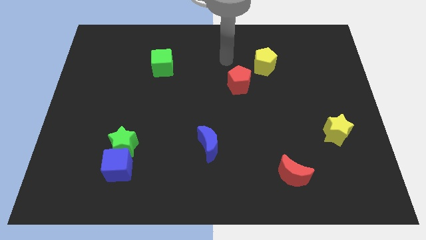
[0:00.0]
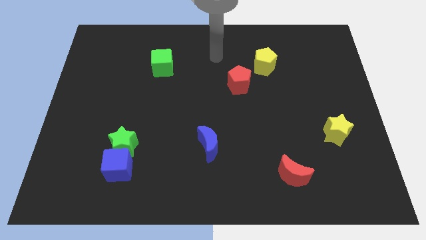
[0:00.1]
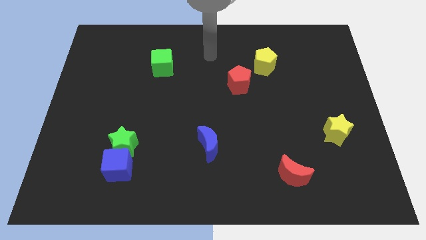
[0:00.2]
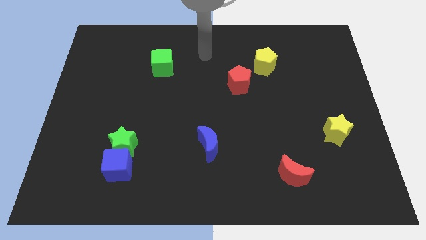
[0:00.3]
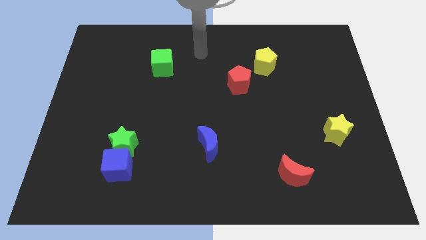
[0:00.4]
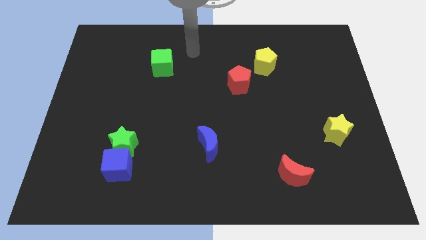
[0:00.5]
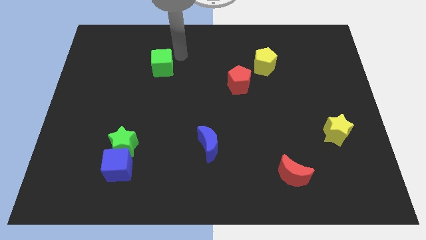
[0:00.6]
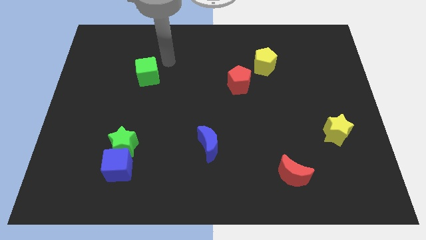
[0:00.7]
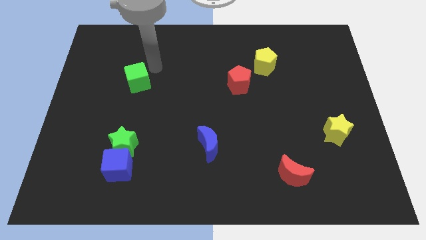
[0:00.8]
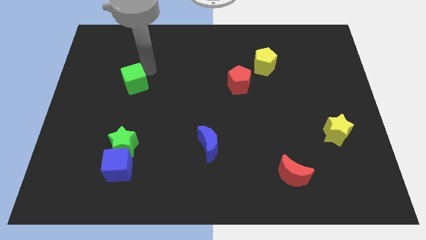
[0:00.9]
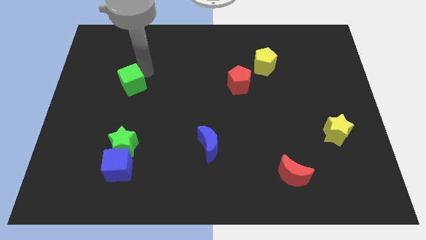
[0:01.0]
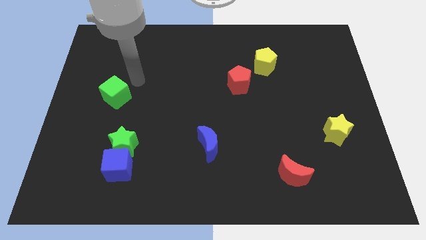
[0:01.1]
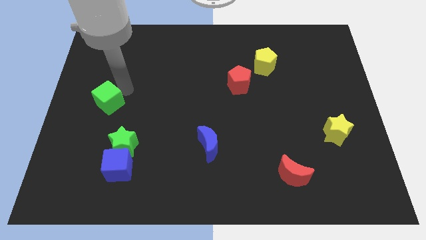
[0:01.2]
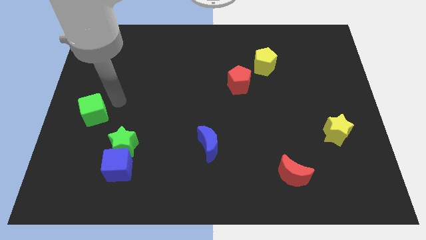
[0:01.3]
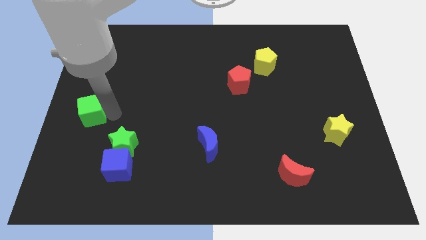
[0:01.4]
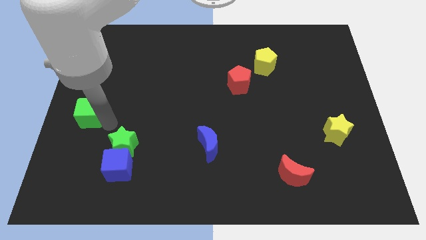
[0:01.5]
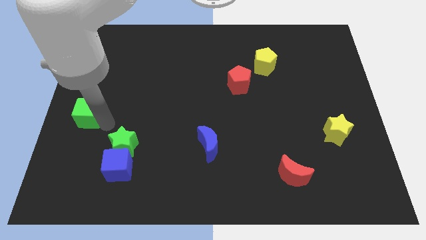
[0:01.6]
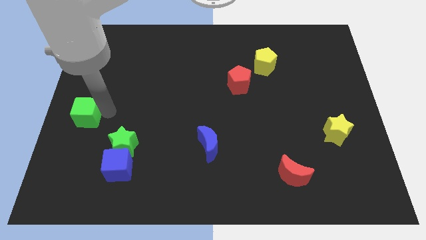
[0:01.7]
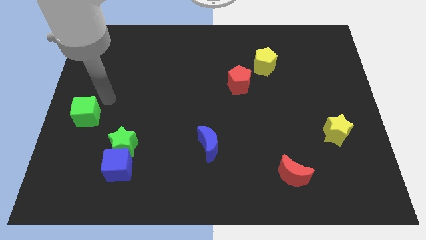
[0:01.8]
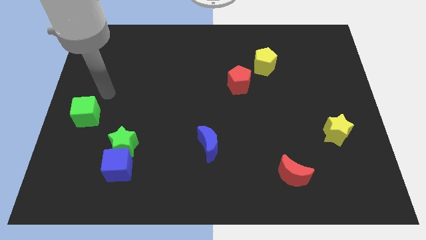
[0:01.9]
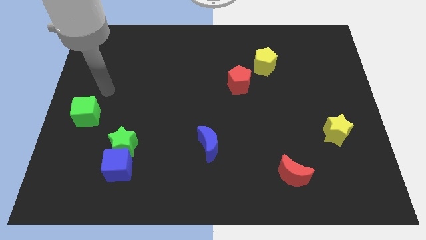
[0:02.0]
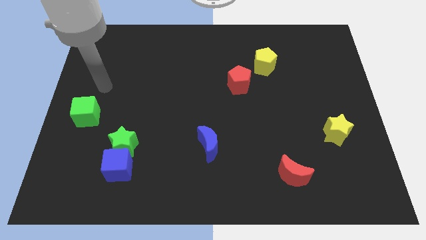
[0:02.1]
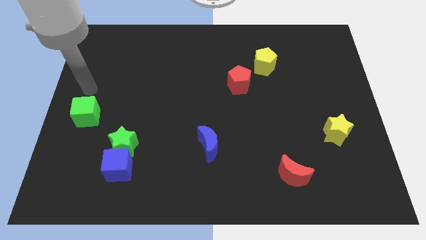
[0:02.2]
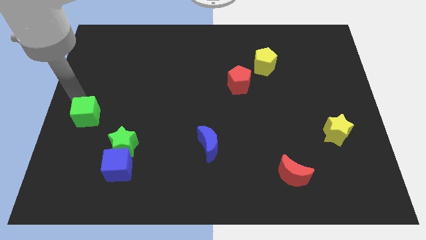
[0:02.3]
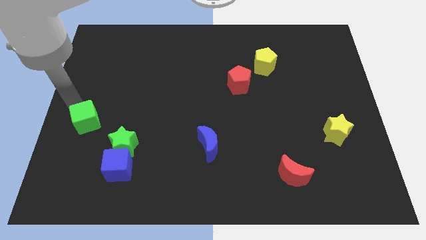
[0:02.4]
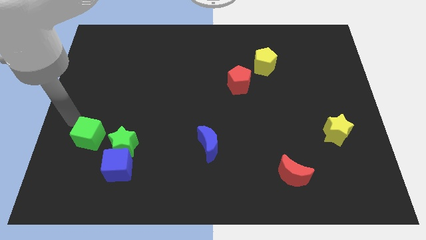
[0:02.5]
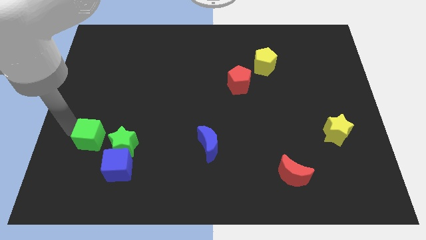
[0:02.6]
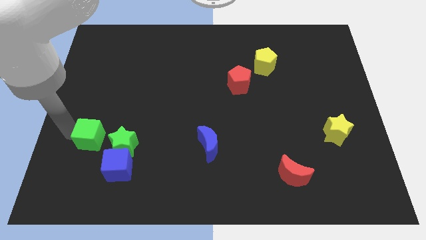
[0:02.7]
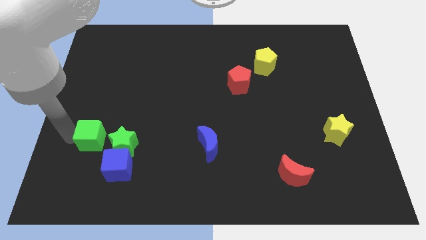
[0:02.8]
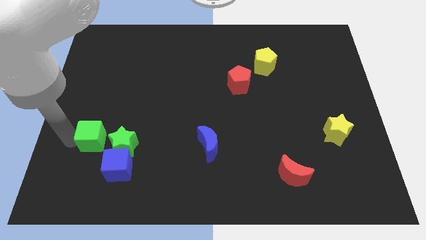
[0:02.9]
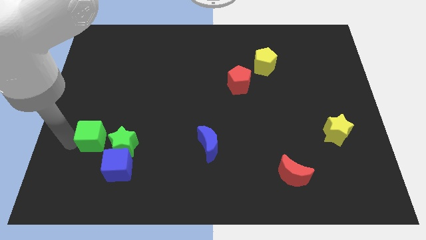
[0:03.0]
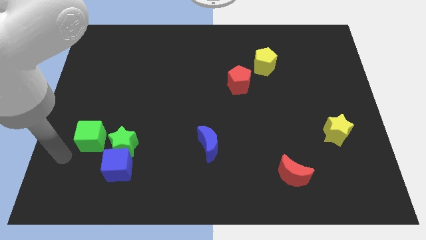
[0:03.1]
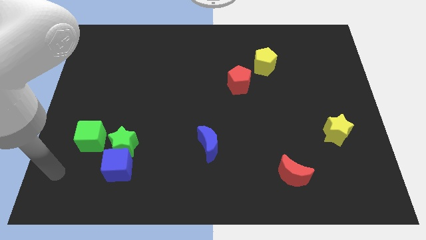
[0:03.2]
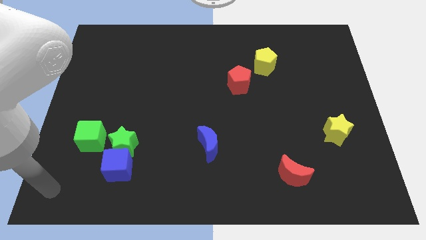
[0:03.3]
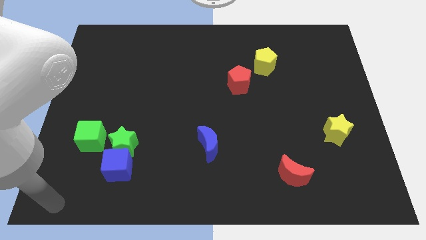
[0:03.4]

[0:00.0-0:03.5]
push the green cube to the left of the green star

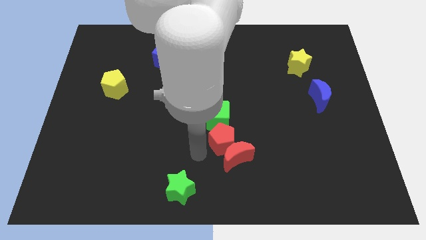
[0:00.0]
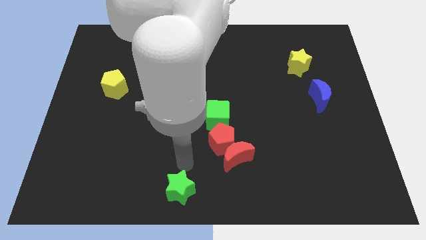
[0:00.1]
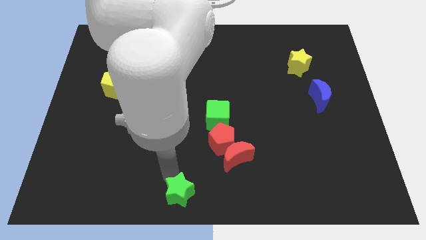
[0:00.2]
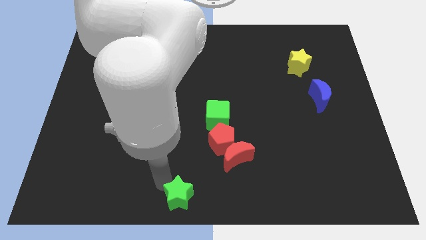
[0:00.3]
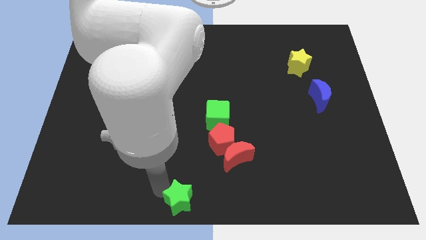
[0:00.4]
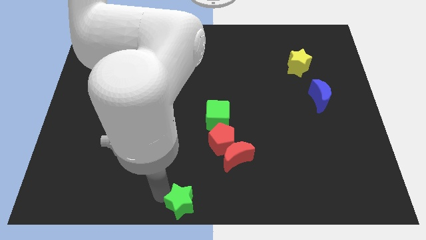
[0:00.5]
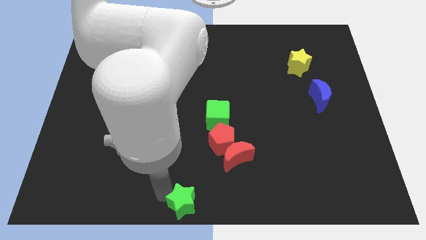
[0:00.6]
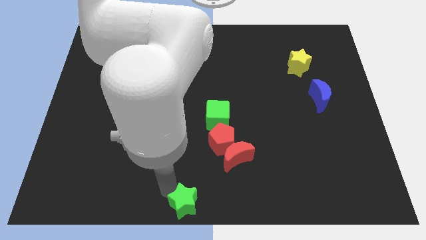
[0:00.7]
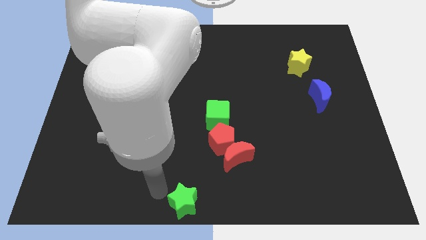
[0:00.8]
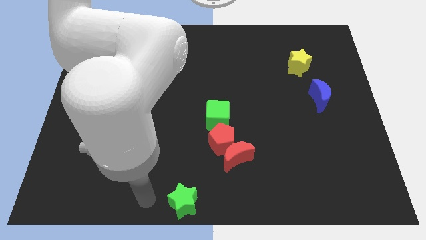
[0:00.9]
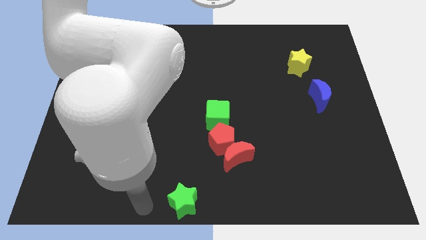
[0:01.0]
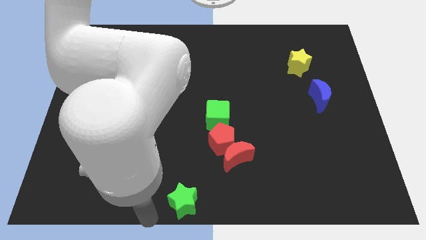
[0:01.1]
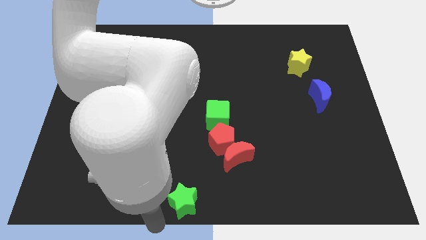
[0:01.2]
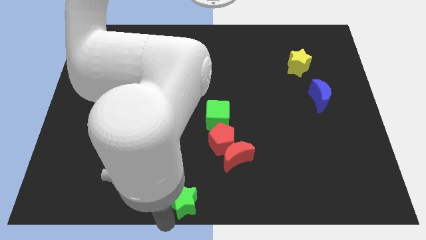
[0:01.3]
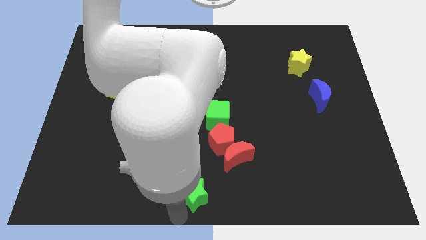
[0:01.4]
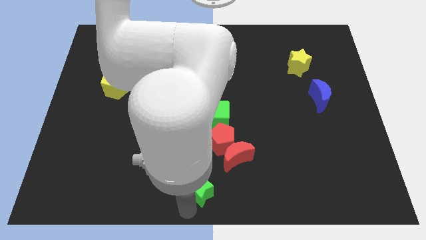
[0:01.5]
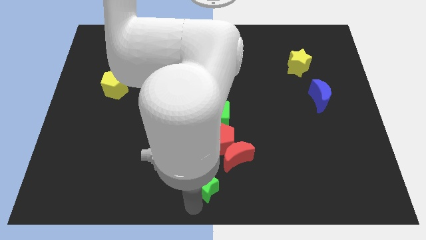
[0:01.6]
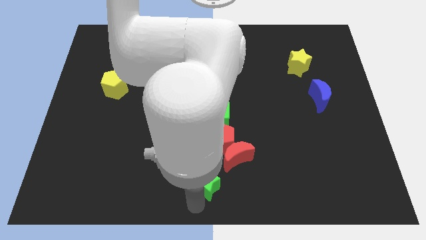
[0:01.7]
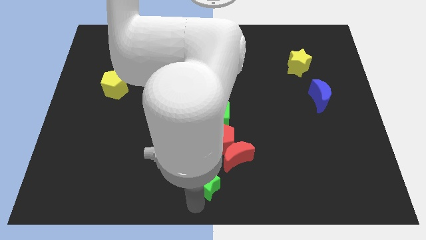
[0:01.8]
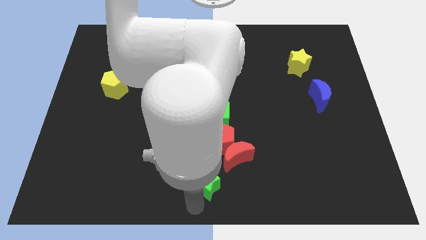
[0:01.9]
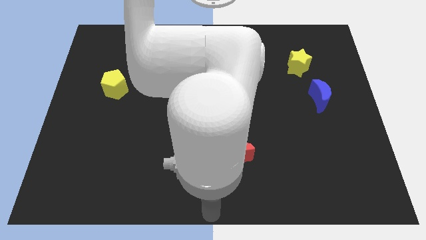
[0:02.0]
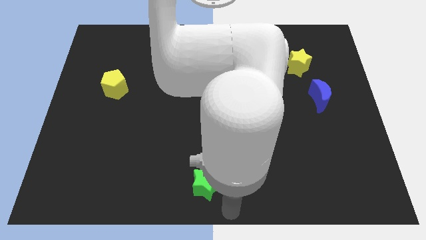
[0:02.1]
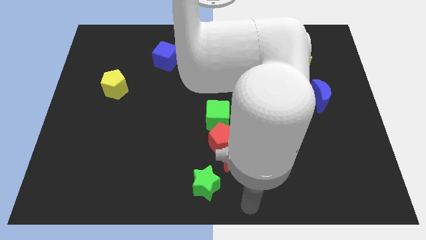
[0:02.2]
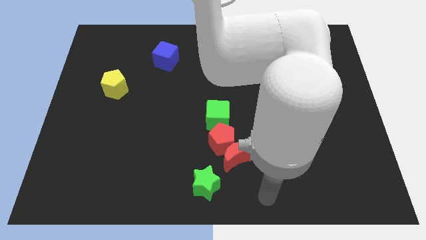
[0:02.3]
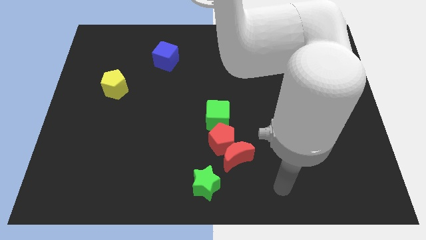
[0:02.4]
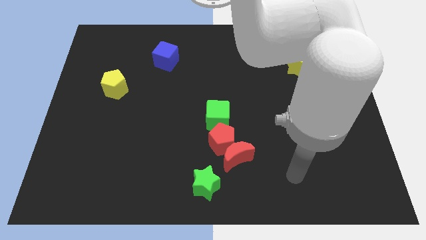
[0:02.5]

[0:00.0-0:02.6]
push the green star to the left of the red crescent

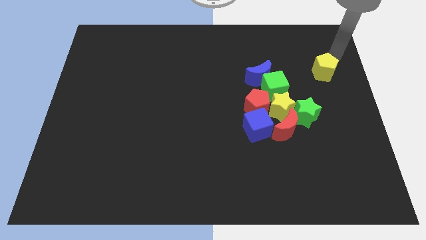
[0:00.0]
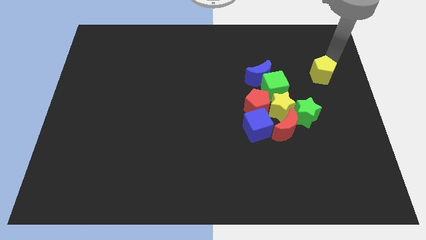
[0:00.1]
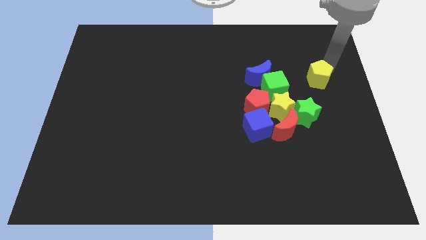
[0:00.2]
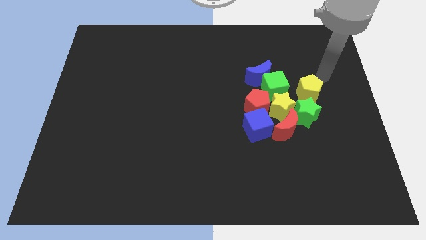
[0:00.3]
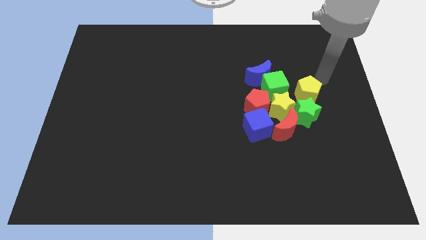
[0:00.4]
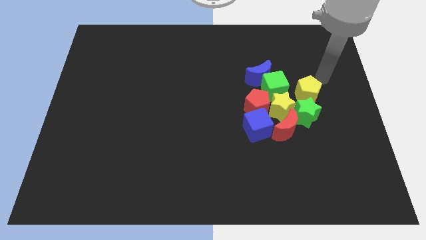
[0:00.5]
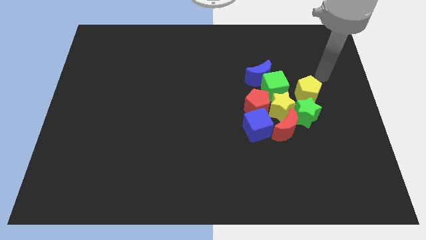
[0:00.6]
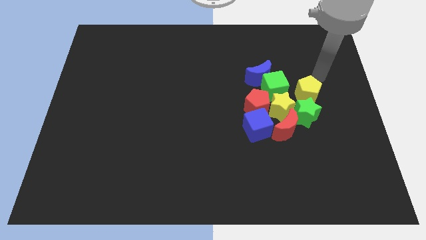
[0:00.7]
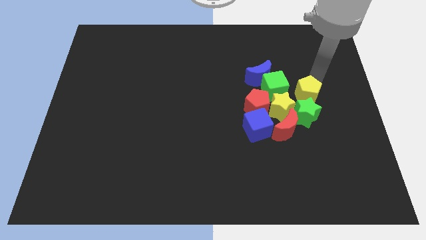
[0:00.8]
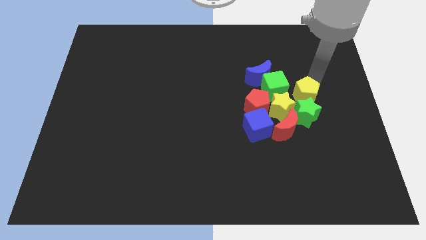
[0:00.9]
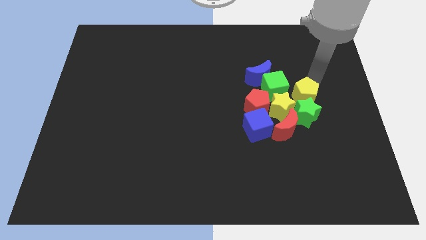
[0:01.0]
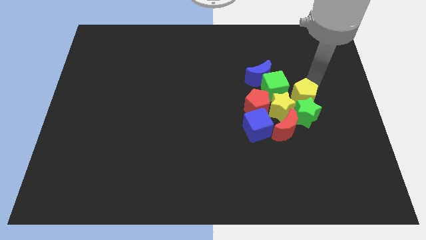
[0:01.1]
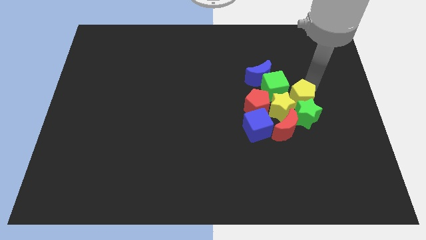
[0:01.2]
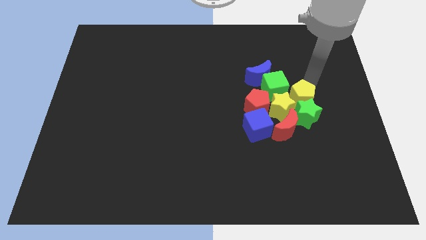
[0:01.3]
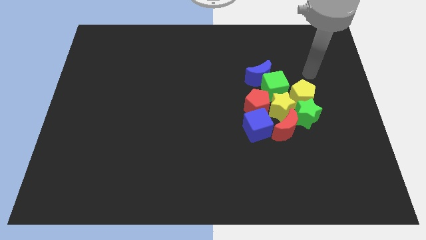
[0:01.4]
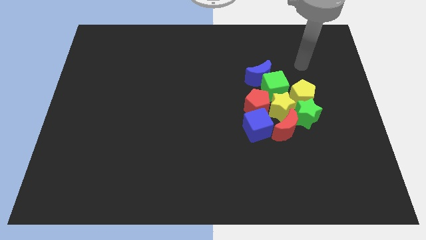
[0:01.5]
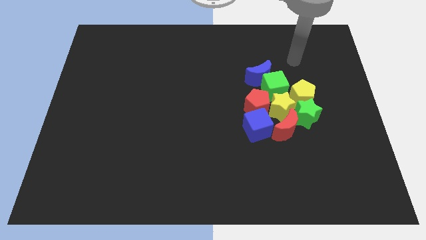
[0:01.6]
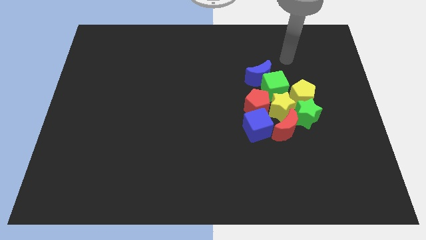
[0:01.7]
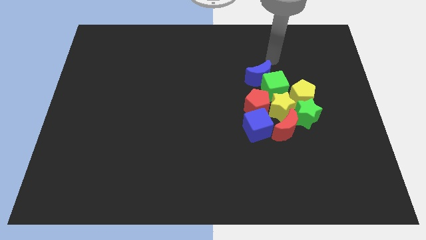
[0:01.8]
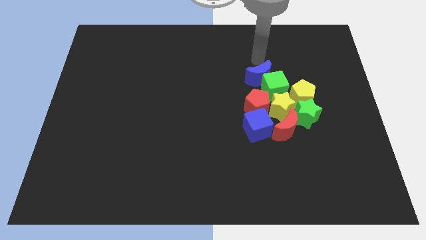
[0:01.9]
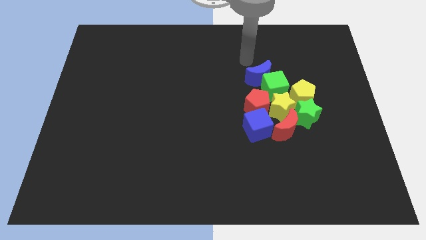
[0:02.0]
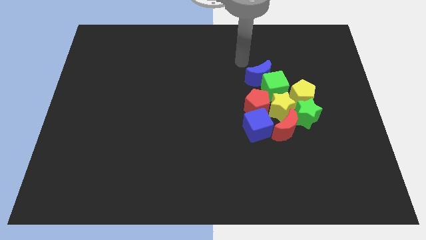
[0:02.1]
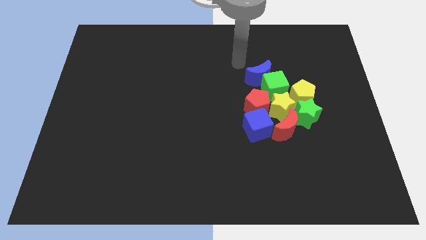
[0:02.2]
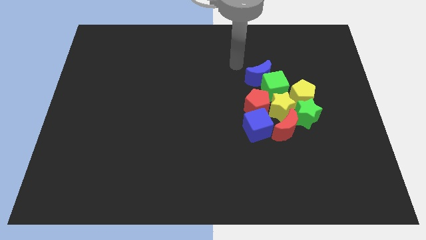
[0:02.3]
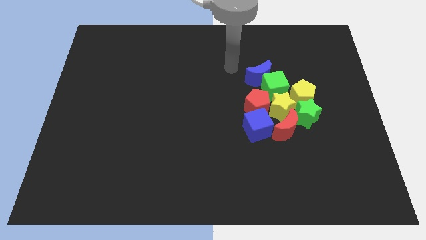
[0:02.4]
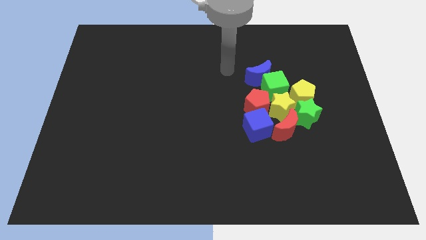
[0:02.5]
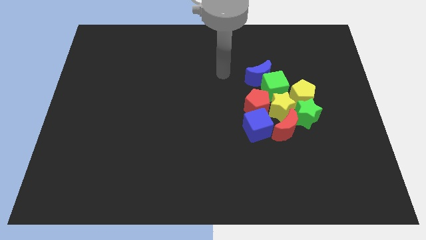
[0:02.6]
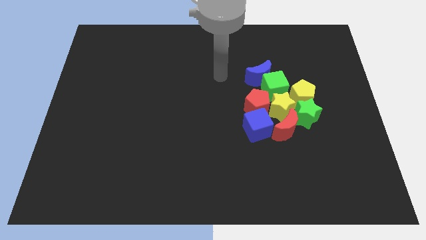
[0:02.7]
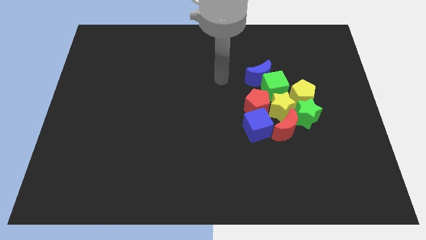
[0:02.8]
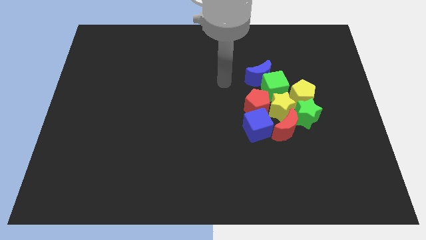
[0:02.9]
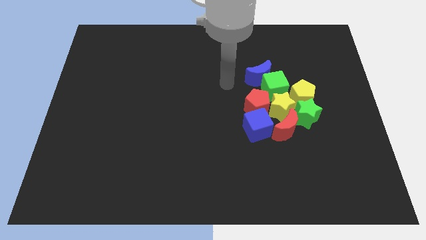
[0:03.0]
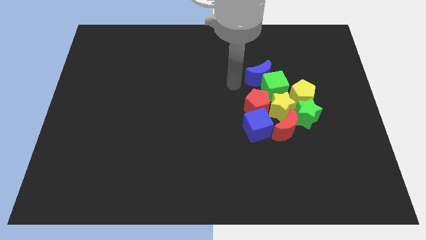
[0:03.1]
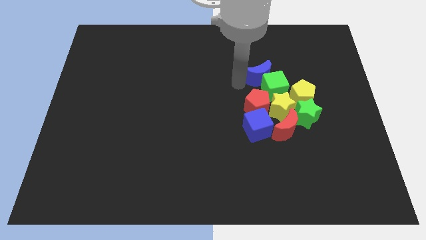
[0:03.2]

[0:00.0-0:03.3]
place the yellow pentagon vertically above the green star
